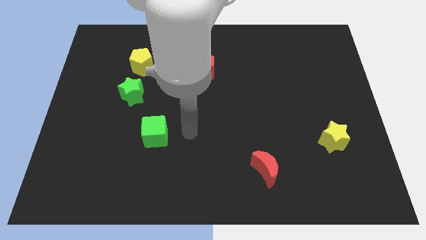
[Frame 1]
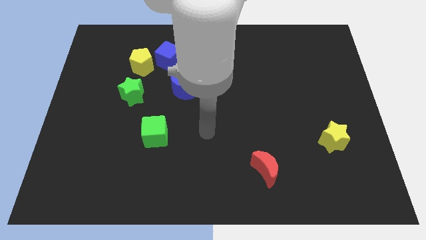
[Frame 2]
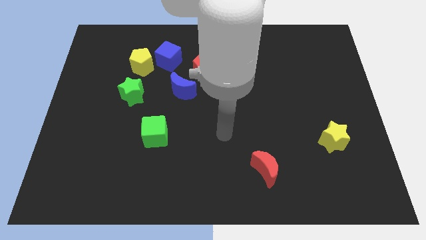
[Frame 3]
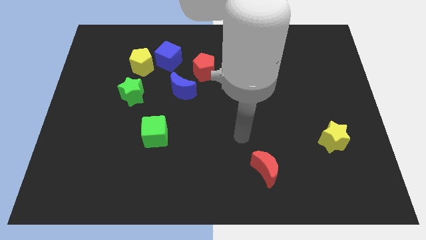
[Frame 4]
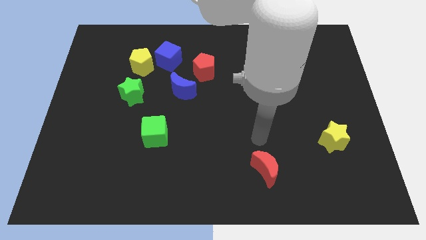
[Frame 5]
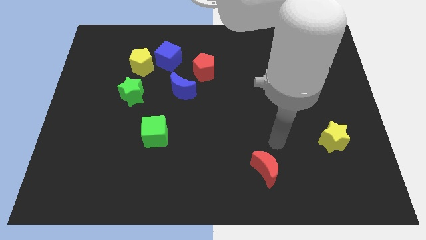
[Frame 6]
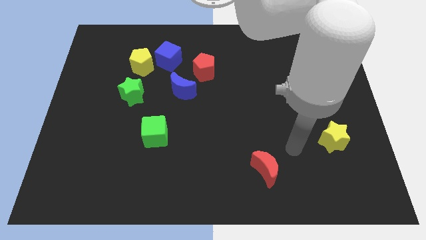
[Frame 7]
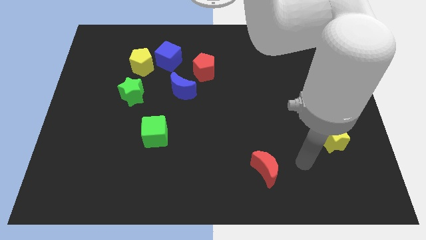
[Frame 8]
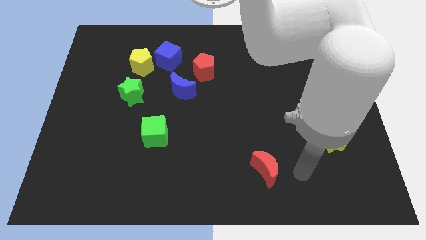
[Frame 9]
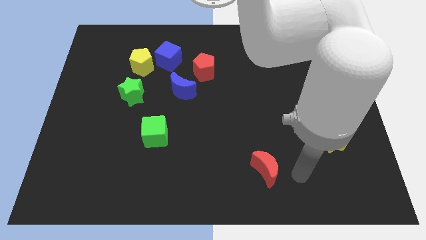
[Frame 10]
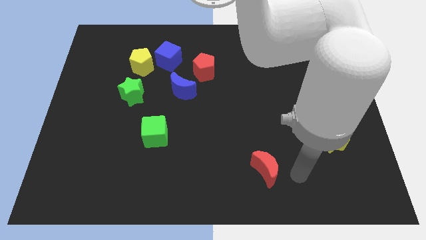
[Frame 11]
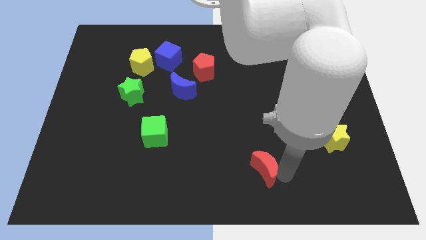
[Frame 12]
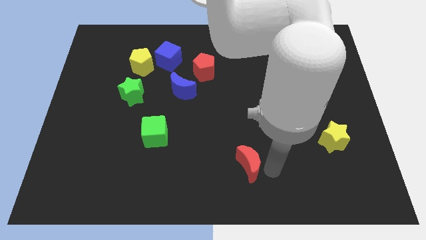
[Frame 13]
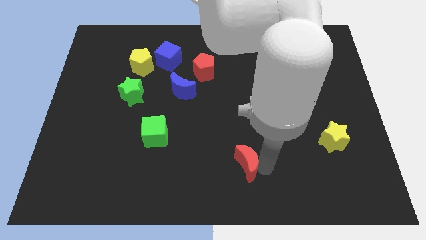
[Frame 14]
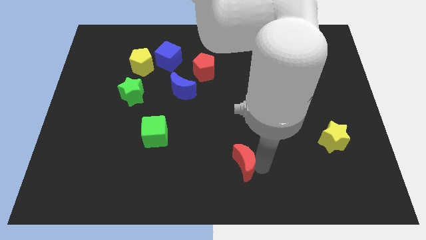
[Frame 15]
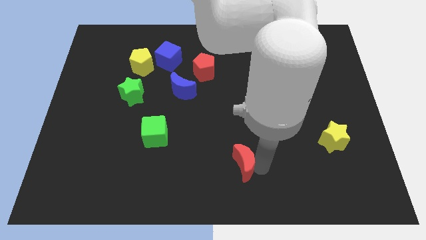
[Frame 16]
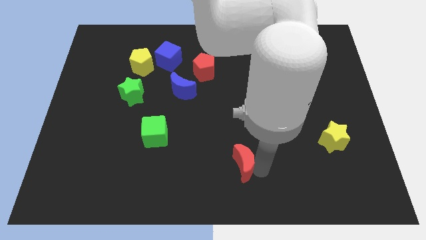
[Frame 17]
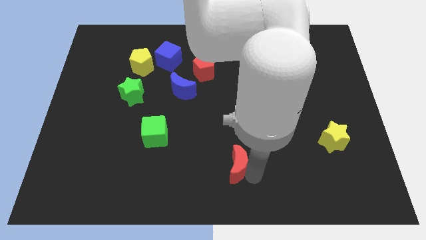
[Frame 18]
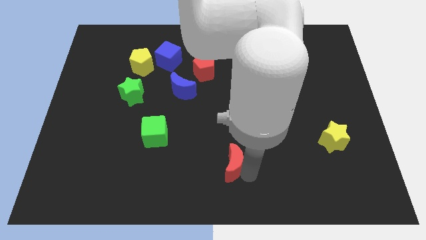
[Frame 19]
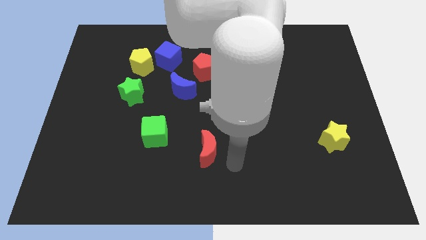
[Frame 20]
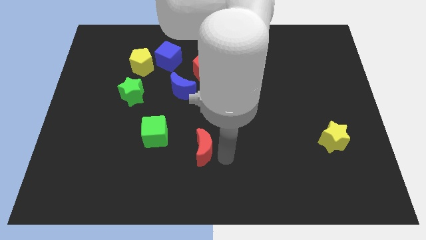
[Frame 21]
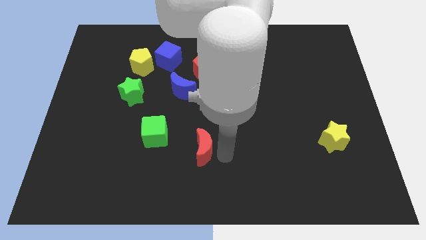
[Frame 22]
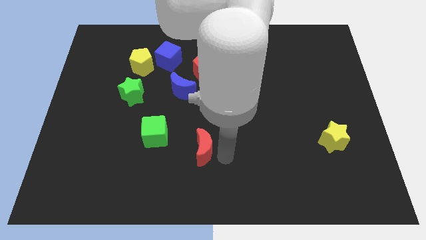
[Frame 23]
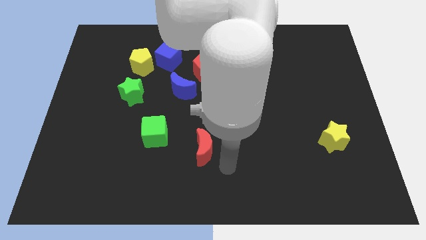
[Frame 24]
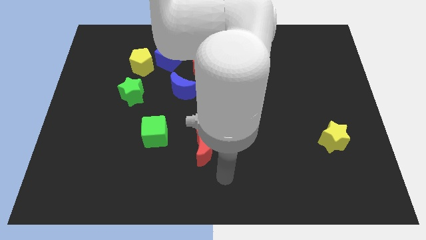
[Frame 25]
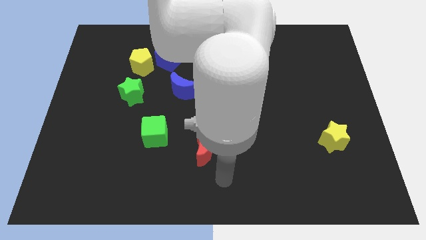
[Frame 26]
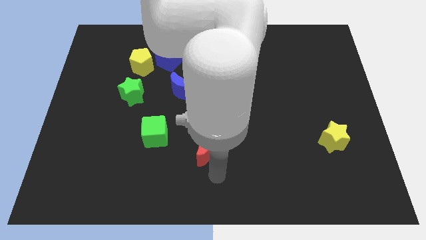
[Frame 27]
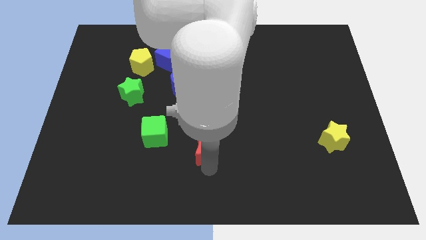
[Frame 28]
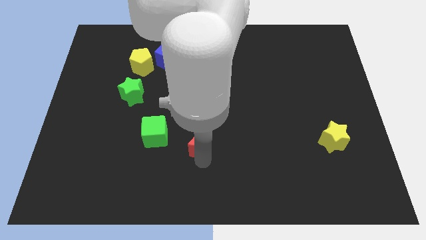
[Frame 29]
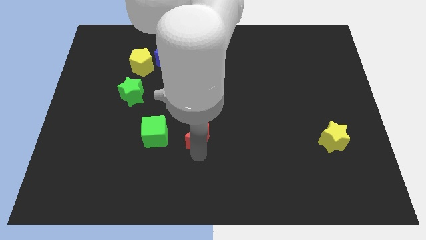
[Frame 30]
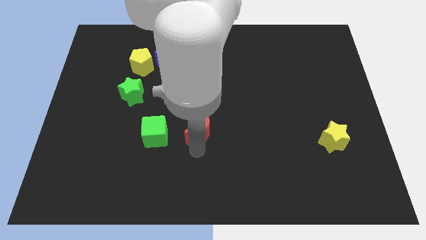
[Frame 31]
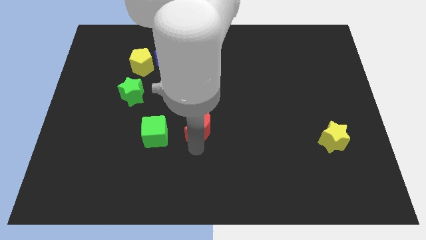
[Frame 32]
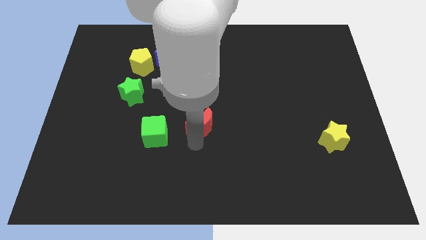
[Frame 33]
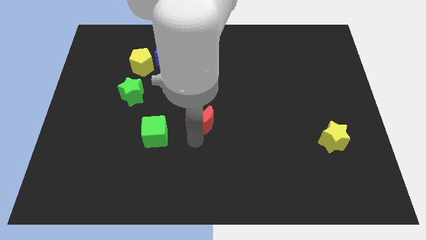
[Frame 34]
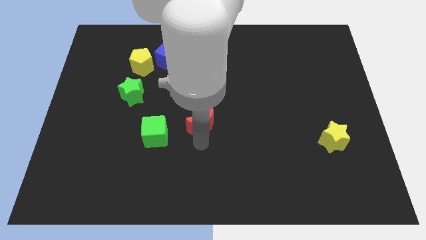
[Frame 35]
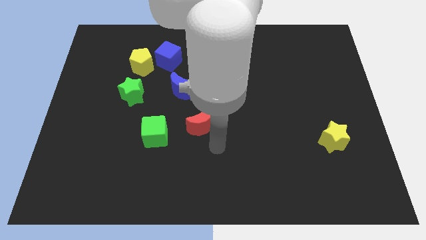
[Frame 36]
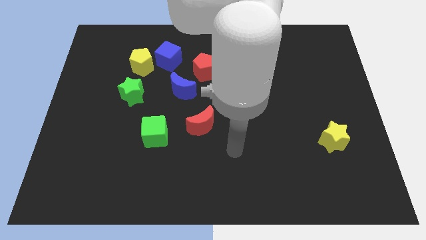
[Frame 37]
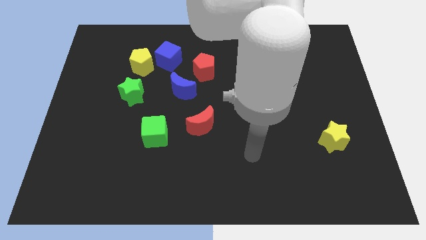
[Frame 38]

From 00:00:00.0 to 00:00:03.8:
push the red crescent to the right of the green cube

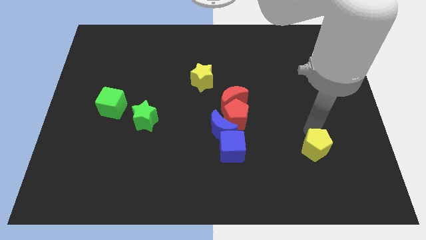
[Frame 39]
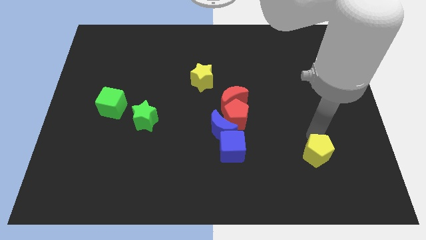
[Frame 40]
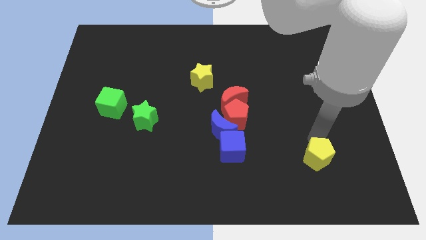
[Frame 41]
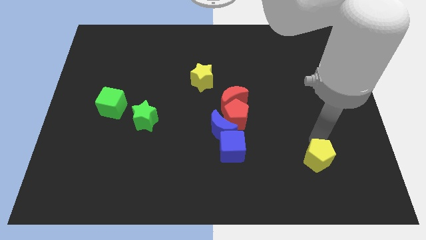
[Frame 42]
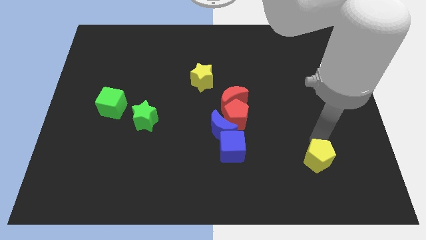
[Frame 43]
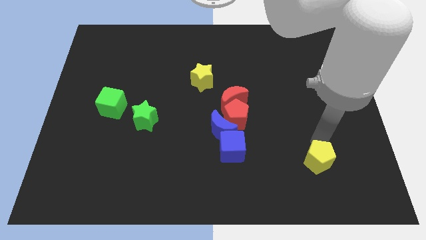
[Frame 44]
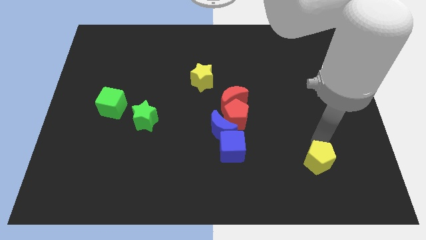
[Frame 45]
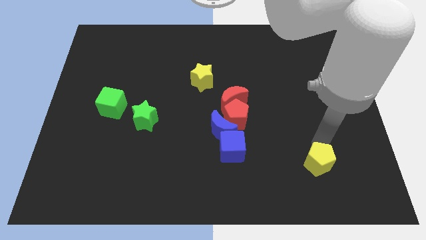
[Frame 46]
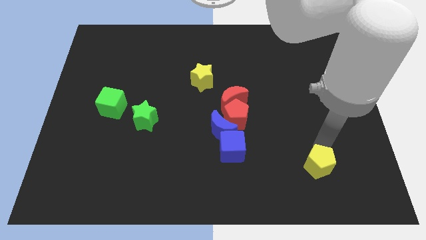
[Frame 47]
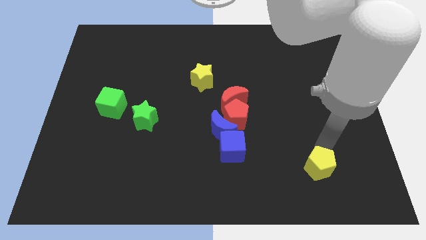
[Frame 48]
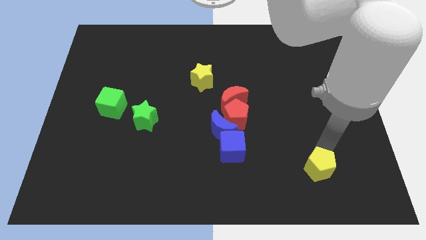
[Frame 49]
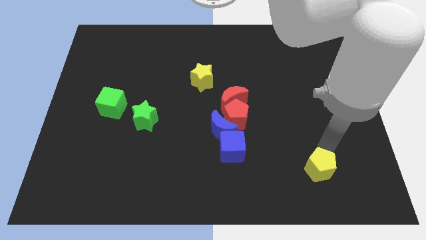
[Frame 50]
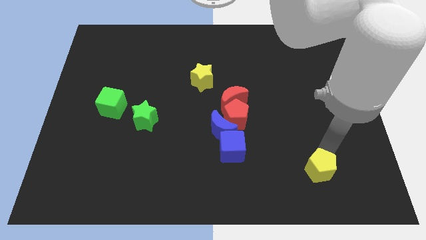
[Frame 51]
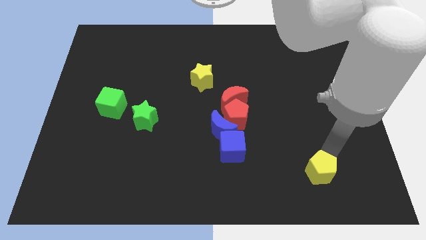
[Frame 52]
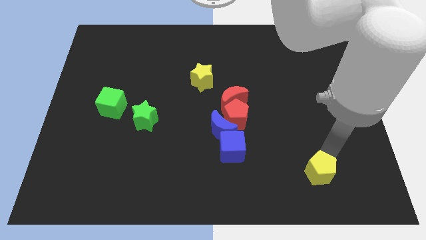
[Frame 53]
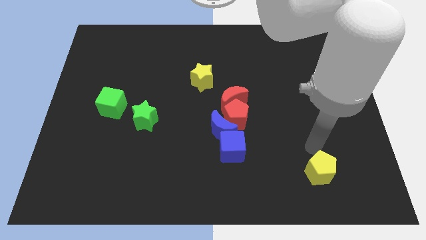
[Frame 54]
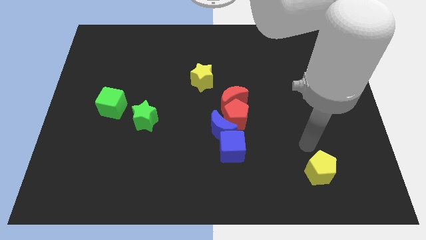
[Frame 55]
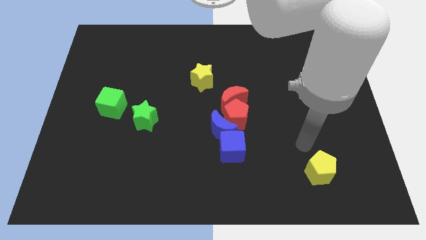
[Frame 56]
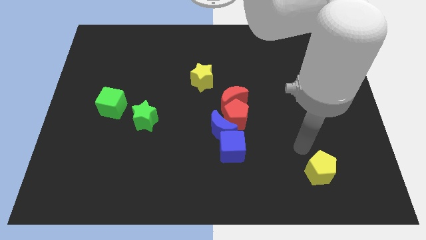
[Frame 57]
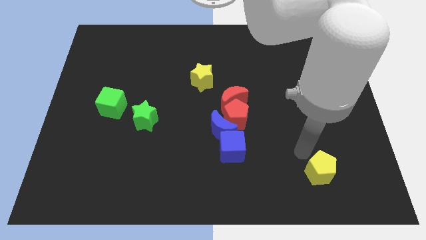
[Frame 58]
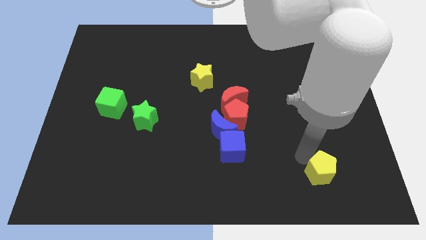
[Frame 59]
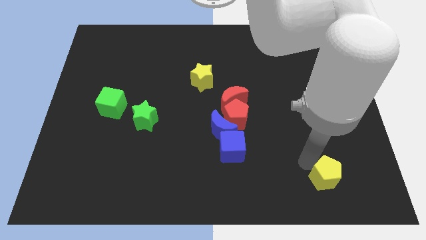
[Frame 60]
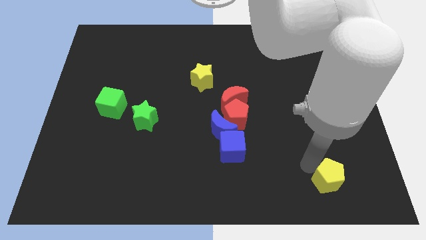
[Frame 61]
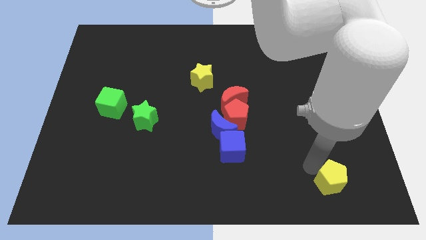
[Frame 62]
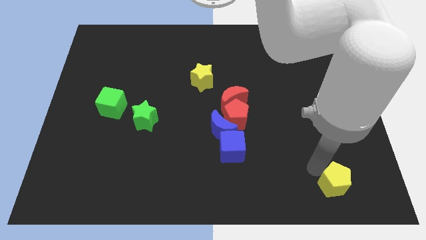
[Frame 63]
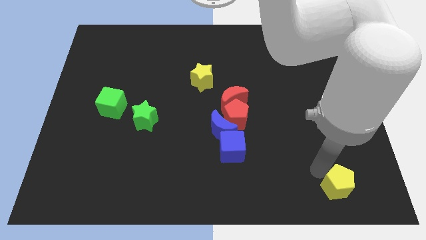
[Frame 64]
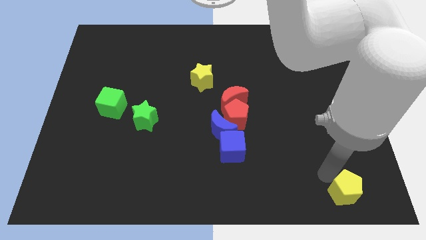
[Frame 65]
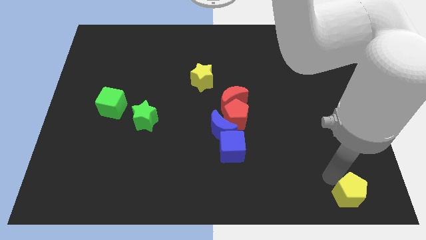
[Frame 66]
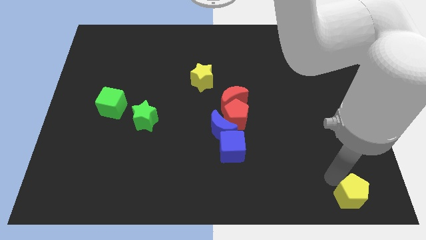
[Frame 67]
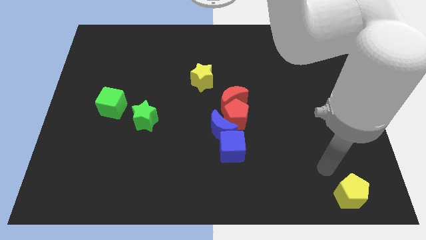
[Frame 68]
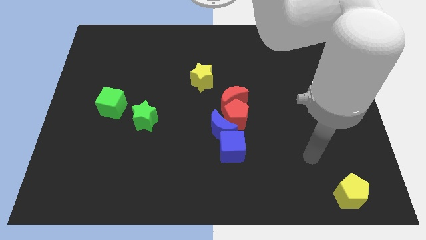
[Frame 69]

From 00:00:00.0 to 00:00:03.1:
move the yellow pentagon to the bottom right of the blue cube

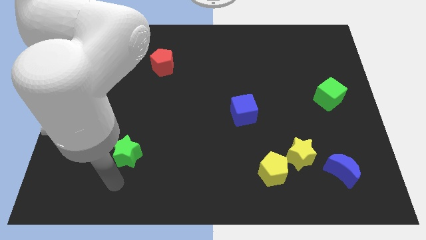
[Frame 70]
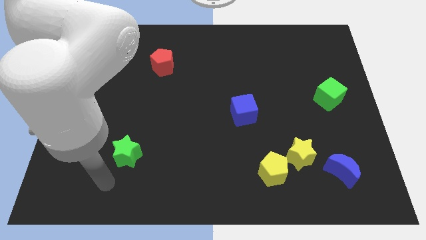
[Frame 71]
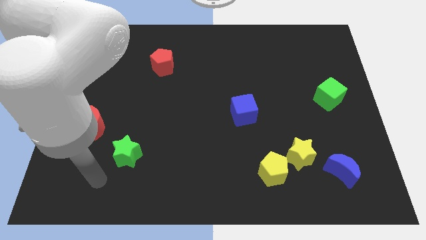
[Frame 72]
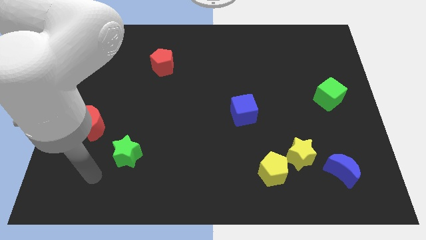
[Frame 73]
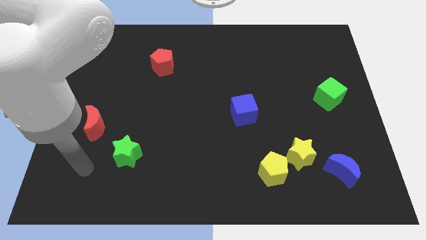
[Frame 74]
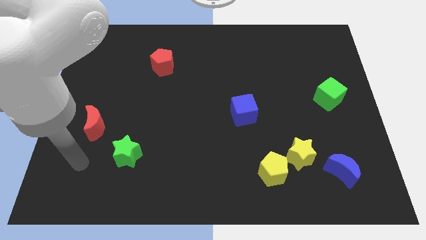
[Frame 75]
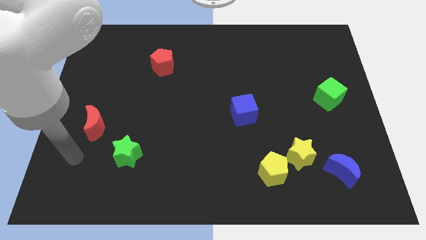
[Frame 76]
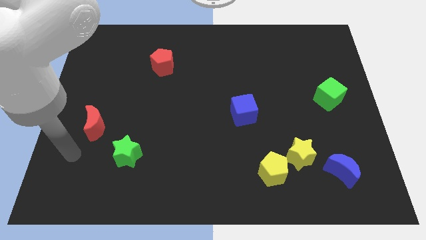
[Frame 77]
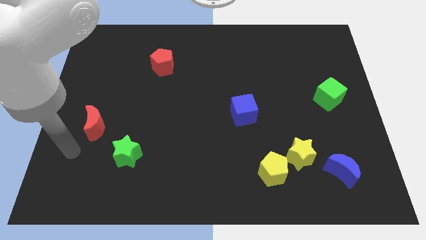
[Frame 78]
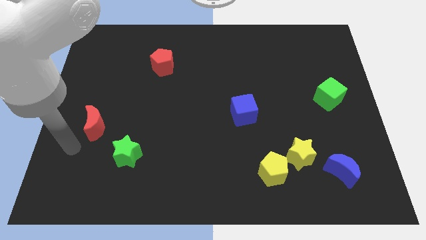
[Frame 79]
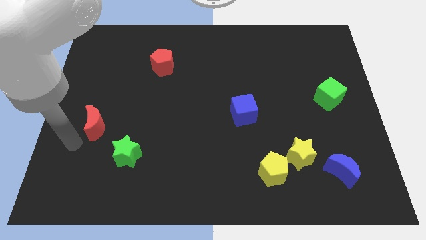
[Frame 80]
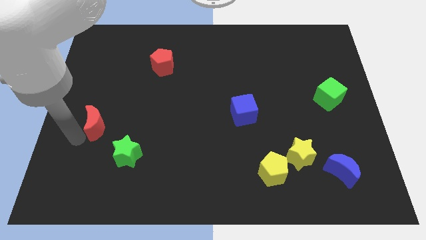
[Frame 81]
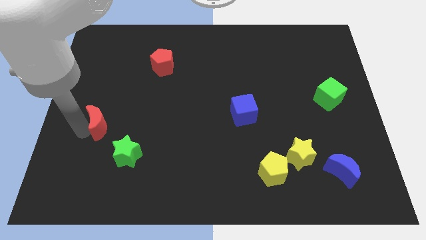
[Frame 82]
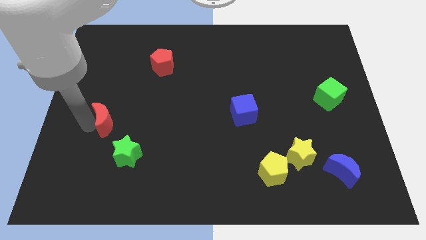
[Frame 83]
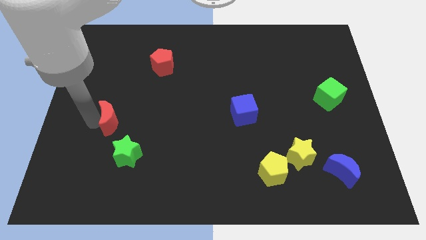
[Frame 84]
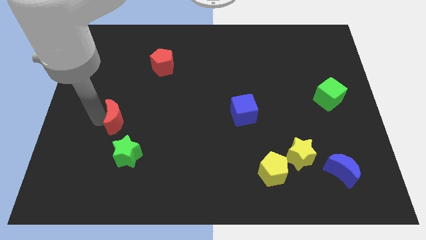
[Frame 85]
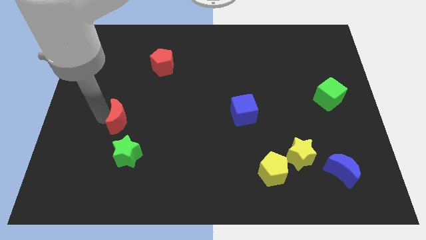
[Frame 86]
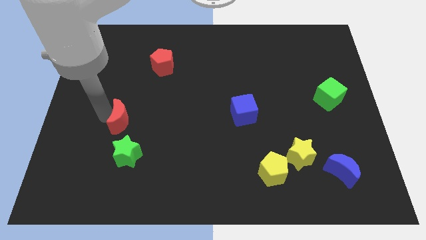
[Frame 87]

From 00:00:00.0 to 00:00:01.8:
move the red crescent slightly right of the board
